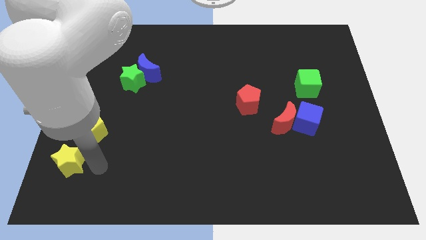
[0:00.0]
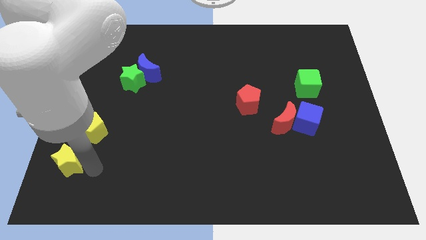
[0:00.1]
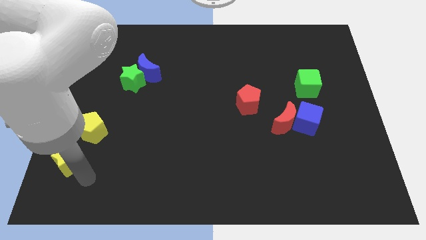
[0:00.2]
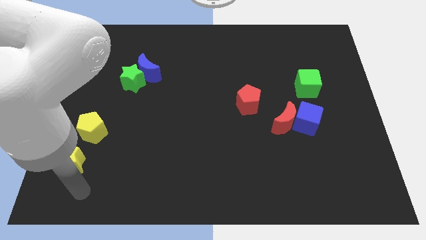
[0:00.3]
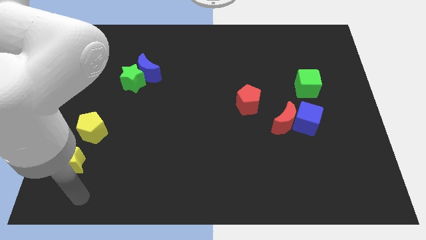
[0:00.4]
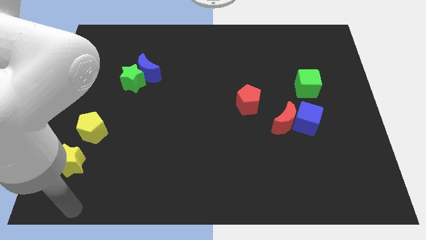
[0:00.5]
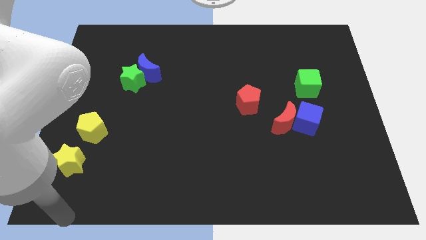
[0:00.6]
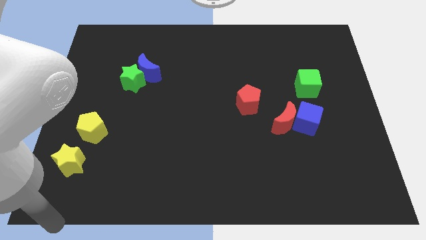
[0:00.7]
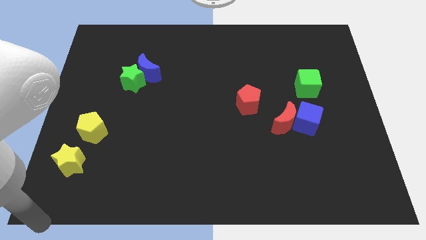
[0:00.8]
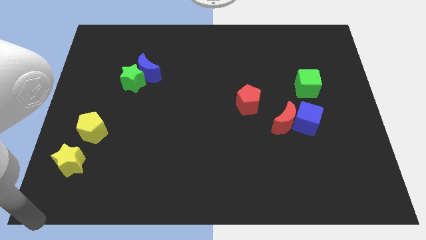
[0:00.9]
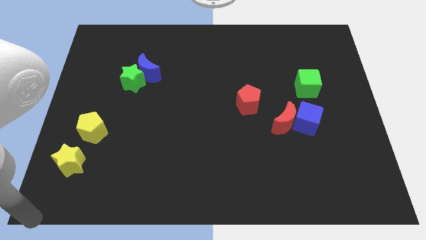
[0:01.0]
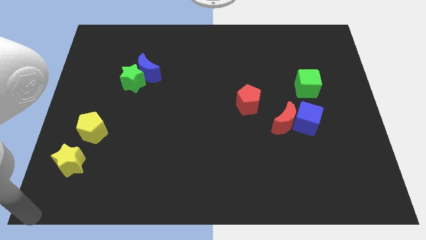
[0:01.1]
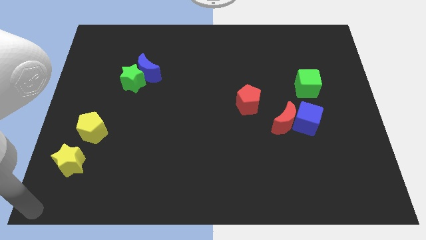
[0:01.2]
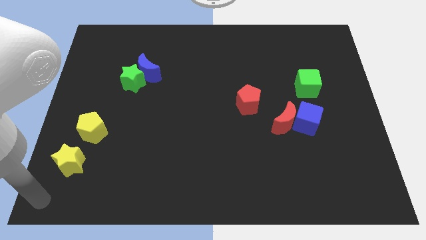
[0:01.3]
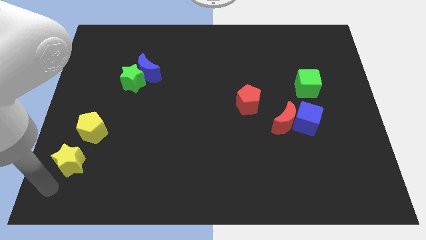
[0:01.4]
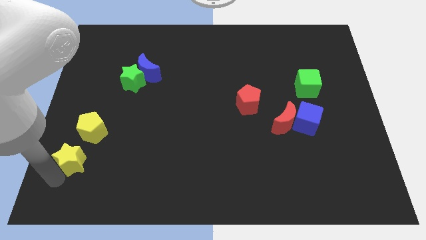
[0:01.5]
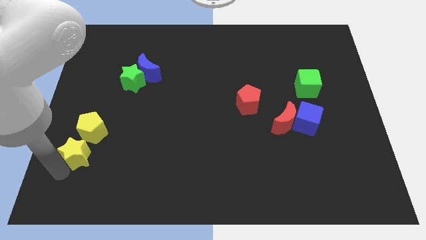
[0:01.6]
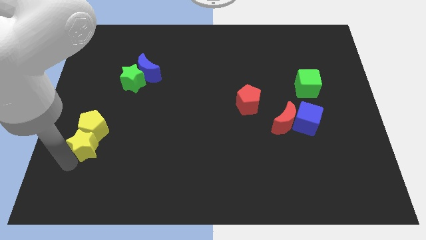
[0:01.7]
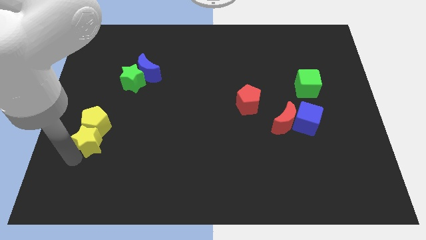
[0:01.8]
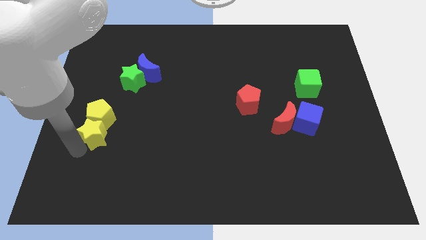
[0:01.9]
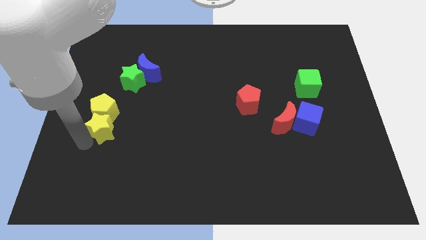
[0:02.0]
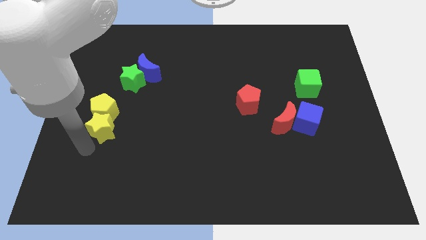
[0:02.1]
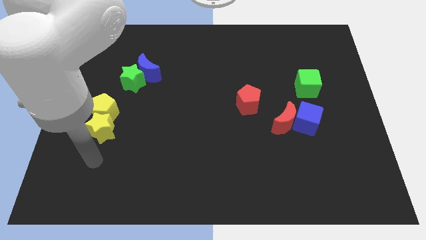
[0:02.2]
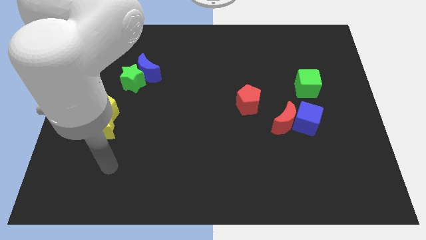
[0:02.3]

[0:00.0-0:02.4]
move the yellow star into the yellow pentagon to the left center

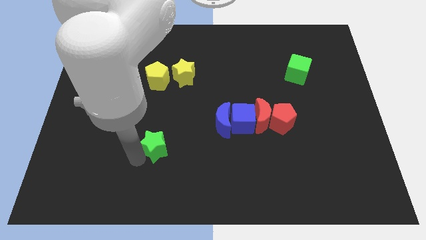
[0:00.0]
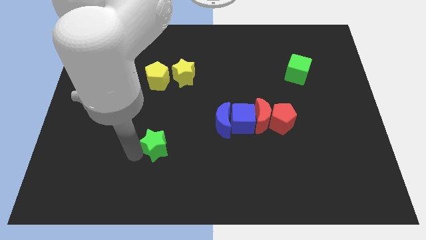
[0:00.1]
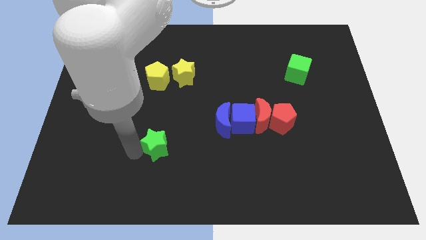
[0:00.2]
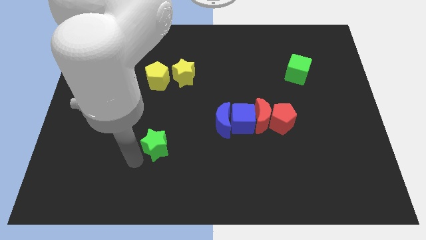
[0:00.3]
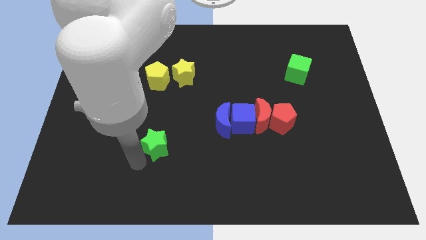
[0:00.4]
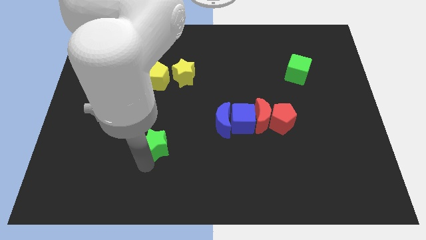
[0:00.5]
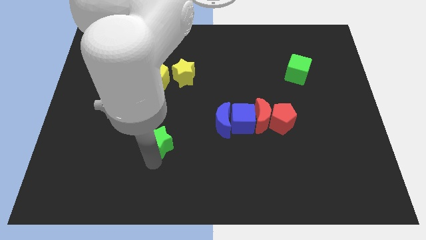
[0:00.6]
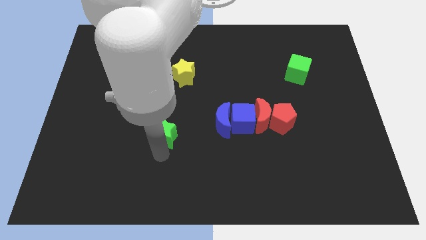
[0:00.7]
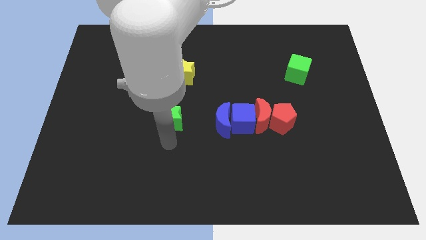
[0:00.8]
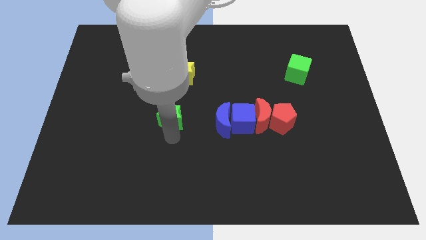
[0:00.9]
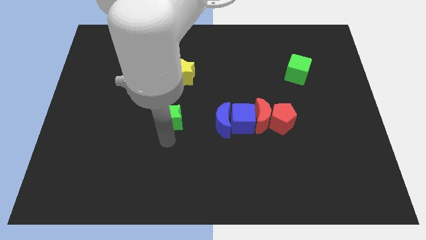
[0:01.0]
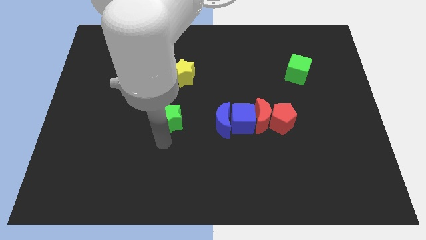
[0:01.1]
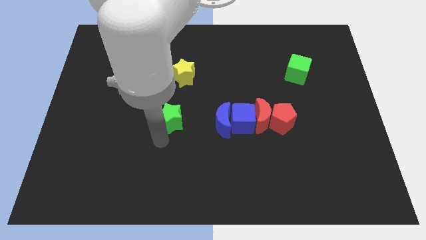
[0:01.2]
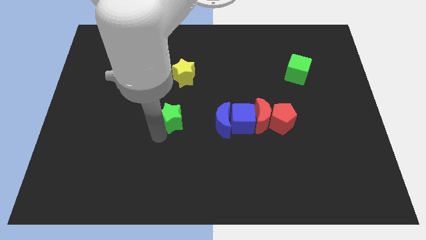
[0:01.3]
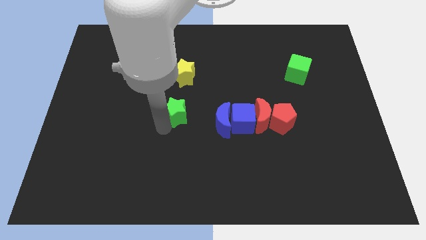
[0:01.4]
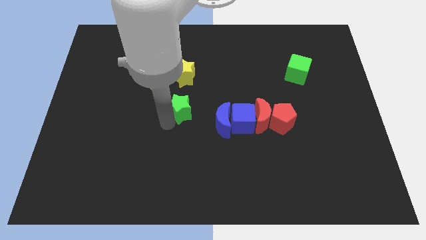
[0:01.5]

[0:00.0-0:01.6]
slide the green star towards the yellow star

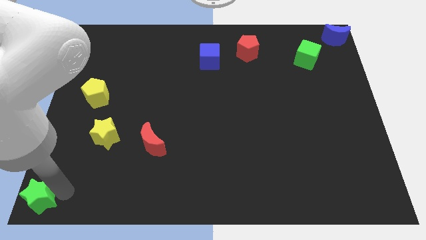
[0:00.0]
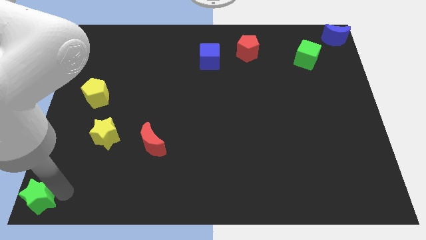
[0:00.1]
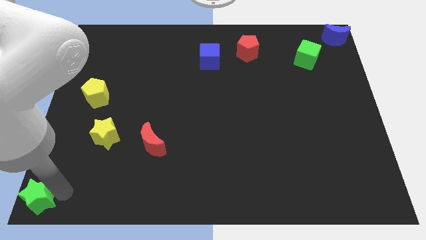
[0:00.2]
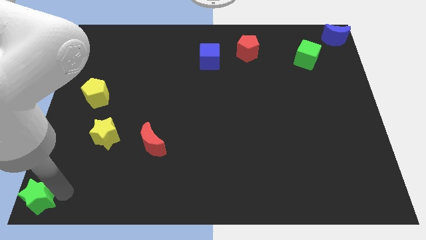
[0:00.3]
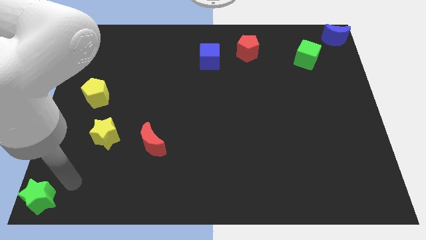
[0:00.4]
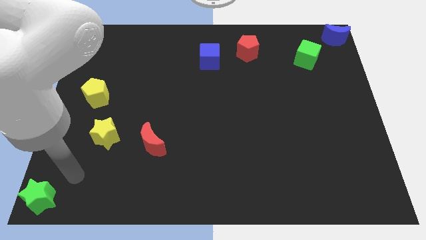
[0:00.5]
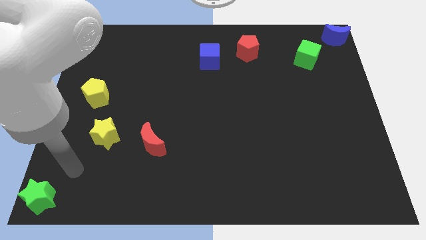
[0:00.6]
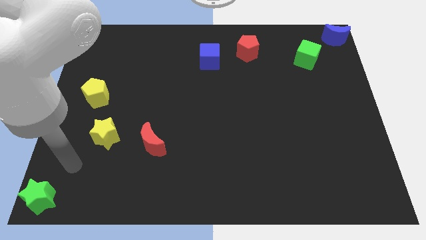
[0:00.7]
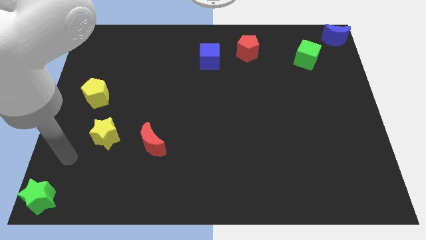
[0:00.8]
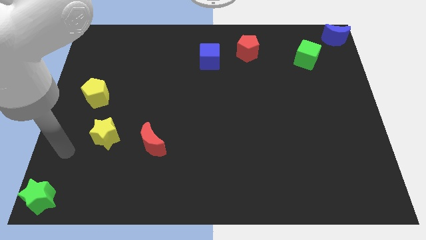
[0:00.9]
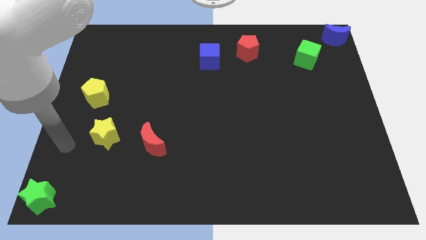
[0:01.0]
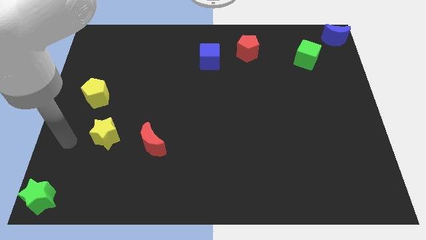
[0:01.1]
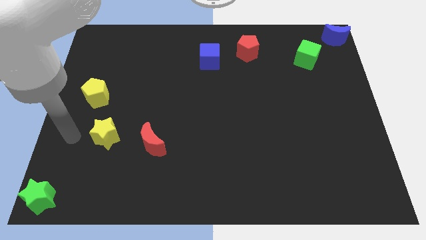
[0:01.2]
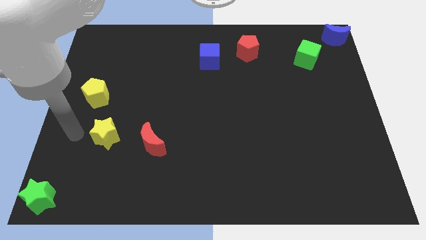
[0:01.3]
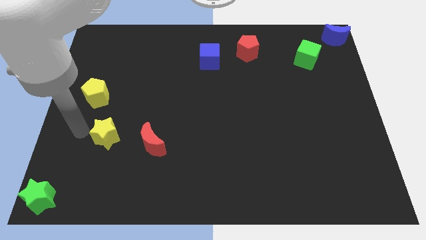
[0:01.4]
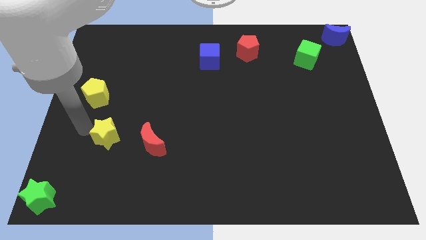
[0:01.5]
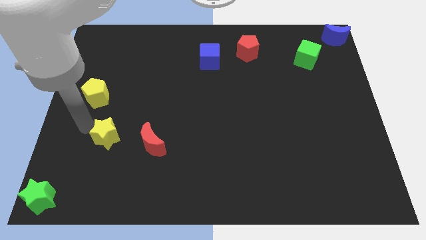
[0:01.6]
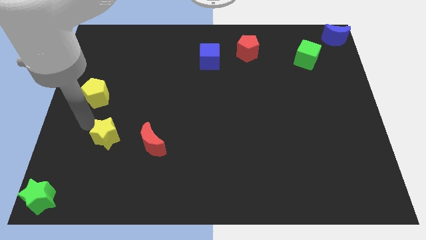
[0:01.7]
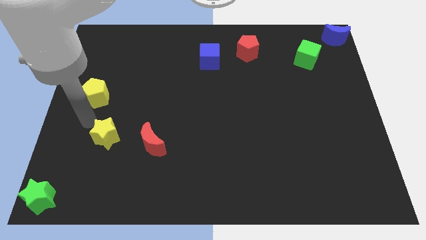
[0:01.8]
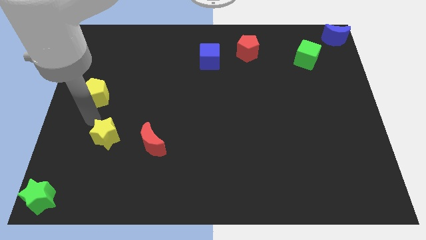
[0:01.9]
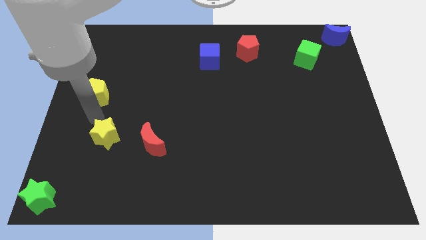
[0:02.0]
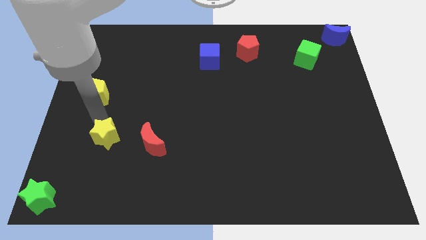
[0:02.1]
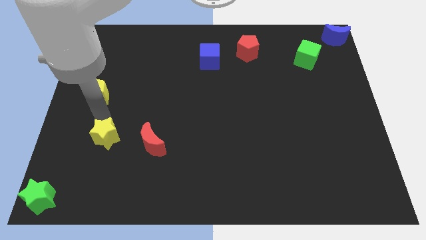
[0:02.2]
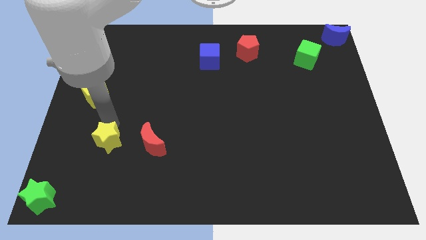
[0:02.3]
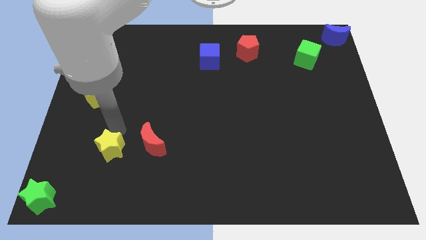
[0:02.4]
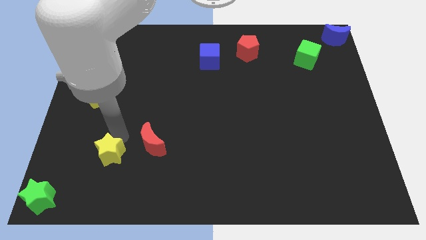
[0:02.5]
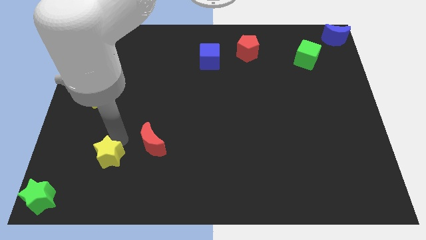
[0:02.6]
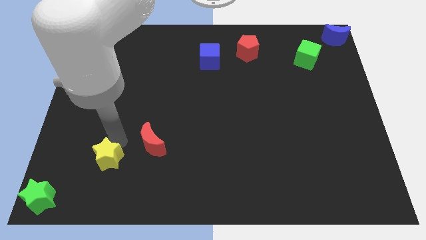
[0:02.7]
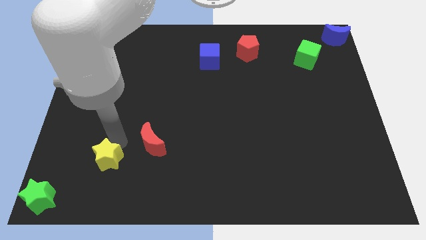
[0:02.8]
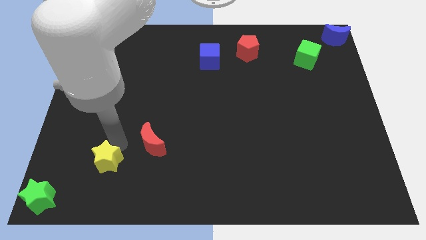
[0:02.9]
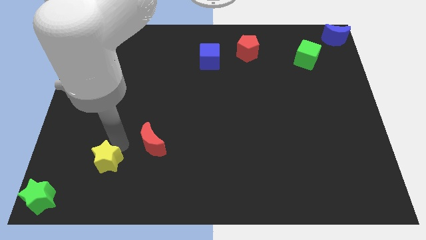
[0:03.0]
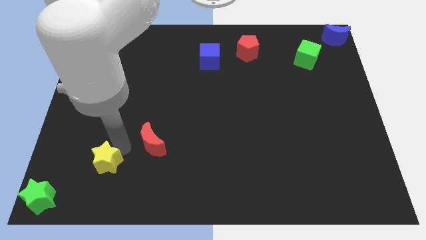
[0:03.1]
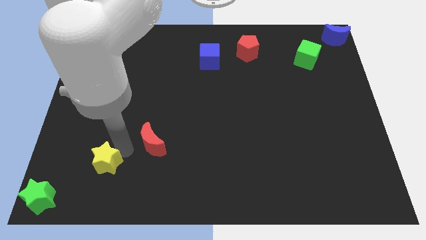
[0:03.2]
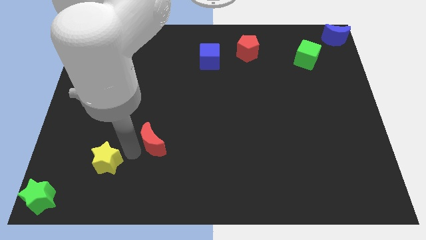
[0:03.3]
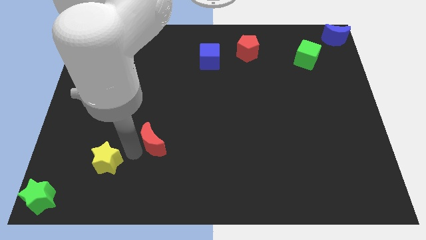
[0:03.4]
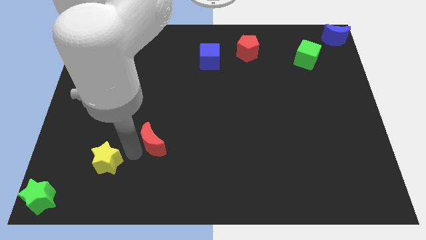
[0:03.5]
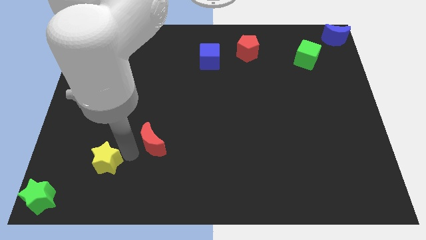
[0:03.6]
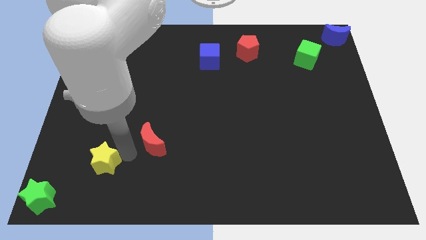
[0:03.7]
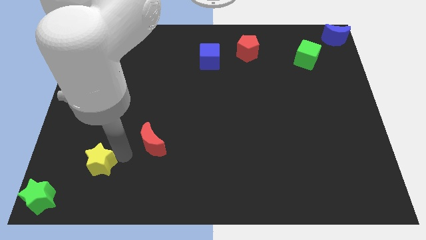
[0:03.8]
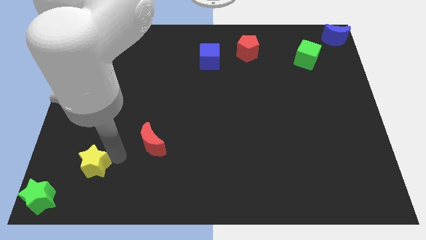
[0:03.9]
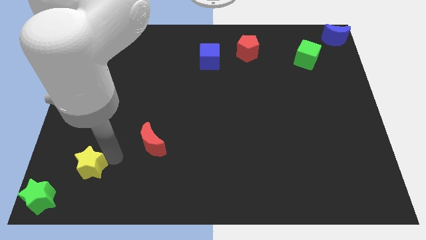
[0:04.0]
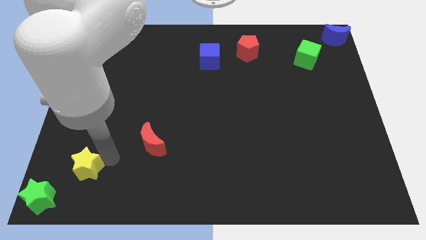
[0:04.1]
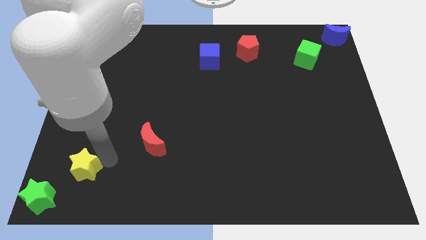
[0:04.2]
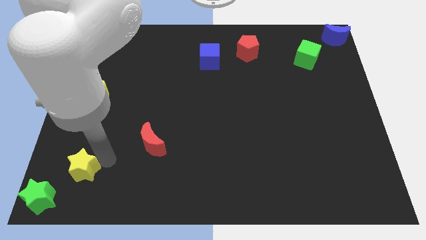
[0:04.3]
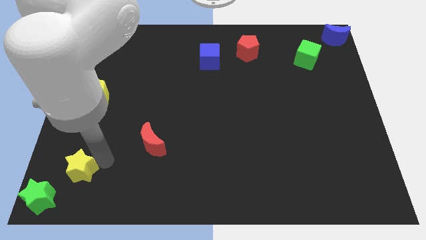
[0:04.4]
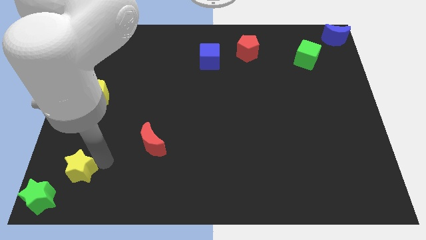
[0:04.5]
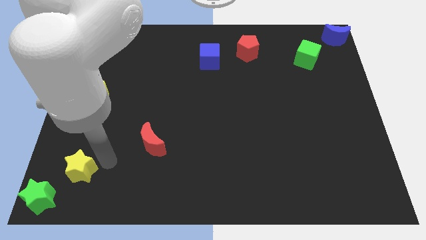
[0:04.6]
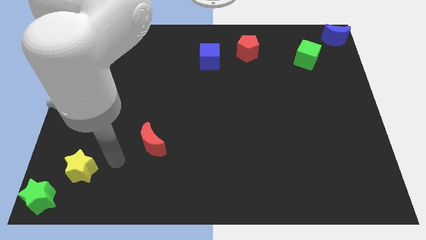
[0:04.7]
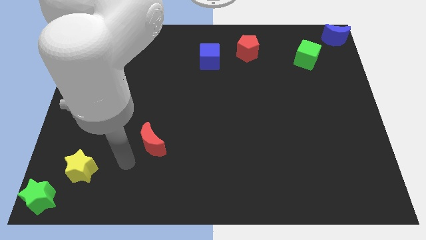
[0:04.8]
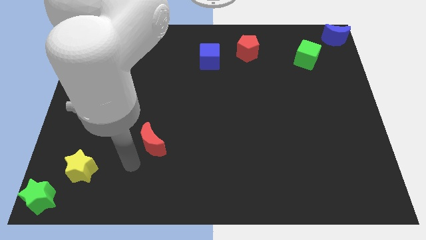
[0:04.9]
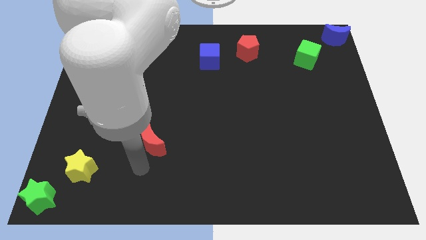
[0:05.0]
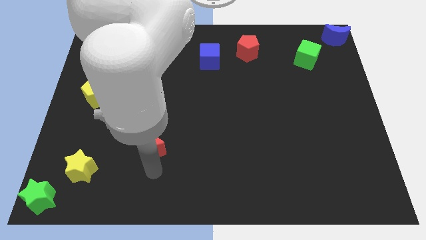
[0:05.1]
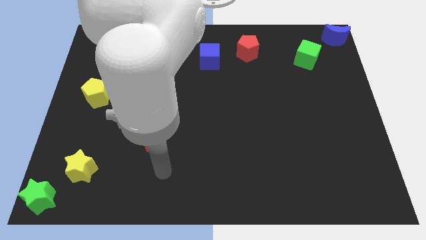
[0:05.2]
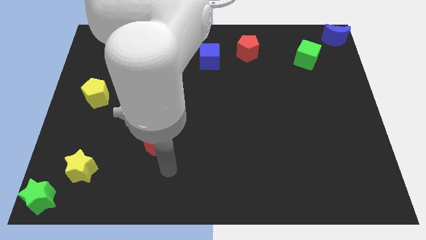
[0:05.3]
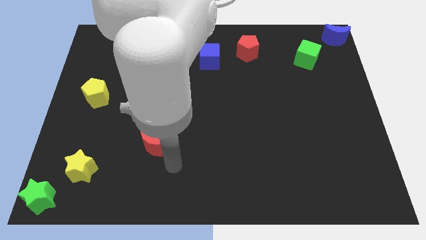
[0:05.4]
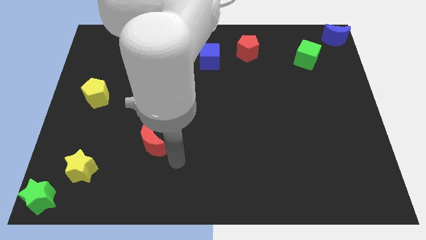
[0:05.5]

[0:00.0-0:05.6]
place the yellow star vertically below the yellow pentagon
